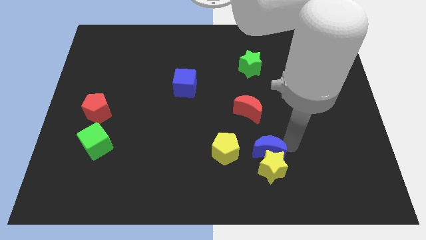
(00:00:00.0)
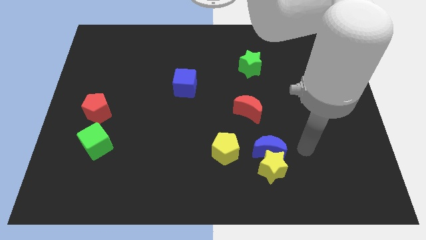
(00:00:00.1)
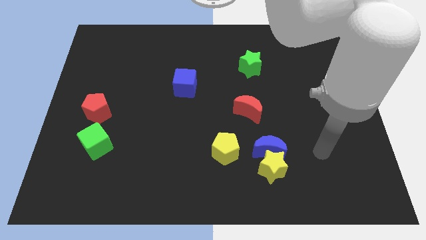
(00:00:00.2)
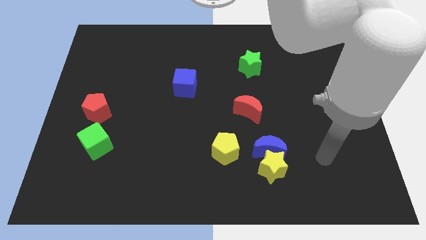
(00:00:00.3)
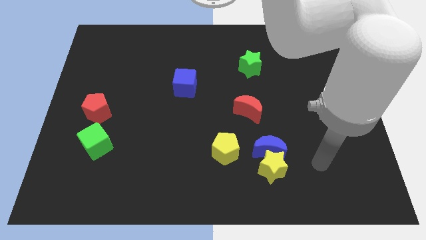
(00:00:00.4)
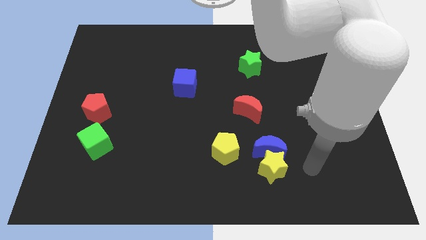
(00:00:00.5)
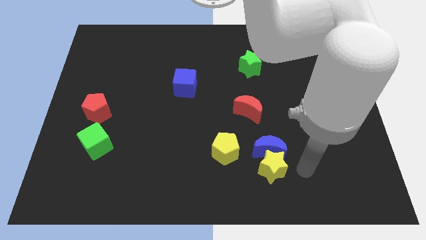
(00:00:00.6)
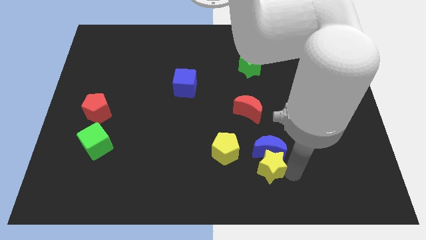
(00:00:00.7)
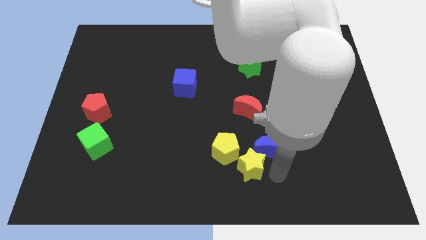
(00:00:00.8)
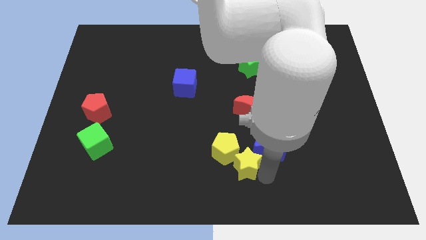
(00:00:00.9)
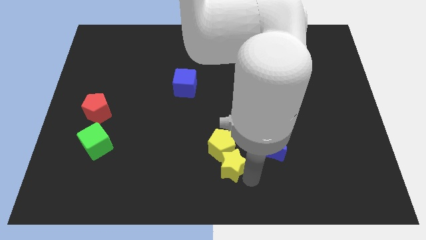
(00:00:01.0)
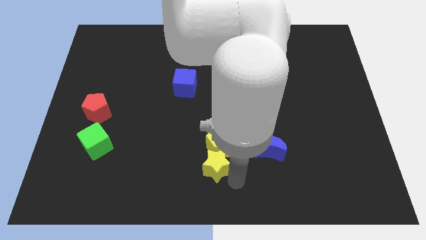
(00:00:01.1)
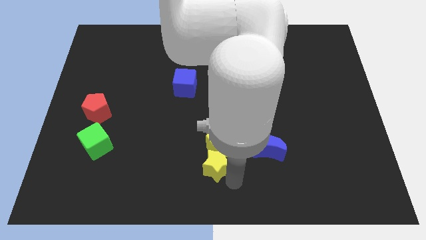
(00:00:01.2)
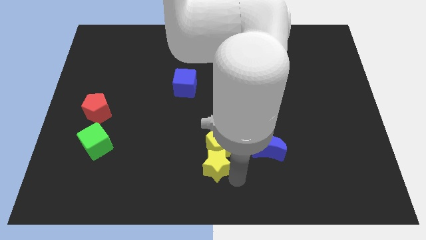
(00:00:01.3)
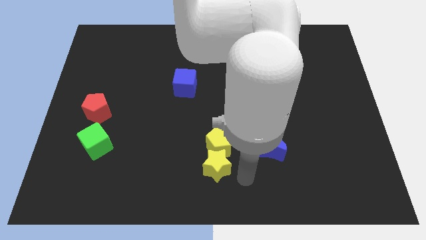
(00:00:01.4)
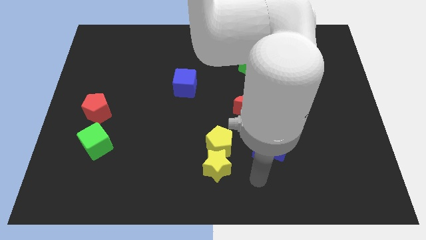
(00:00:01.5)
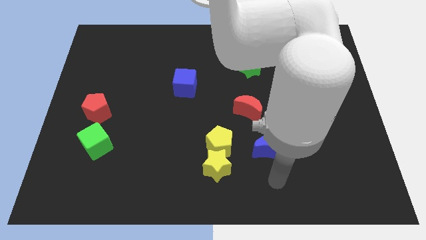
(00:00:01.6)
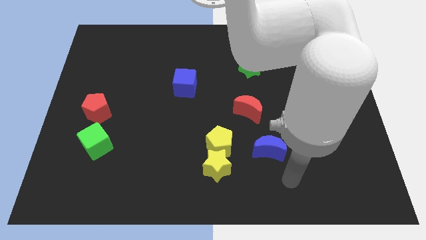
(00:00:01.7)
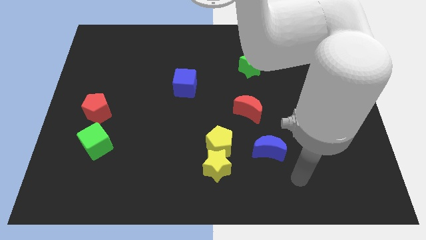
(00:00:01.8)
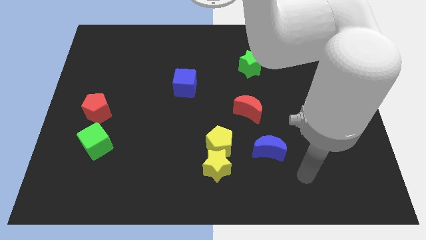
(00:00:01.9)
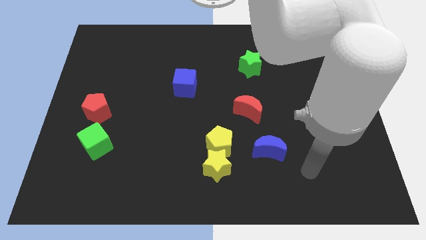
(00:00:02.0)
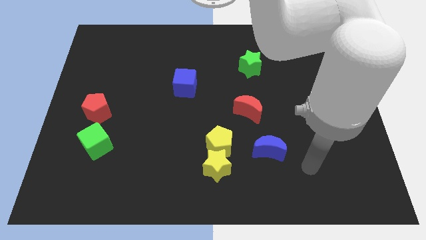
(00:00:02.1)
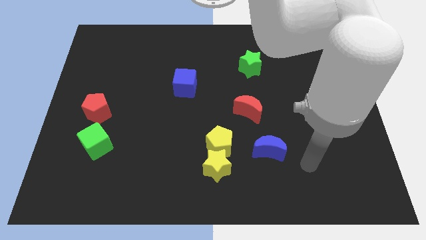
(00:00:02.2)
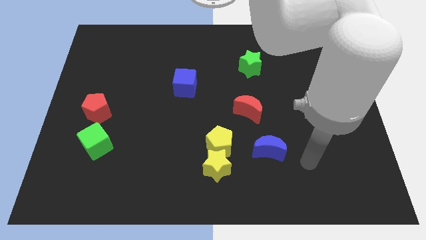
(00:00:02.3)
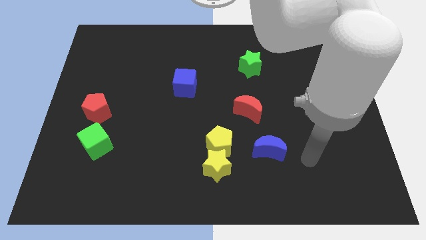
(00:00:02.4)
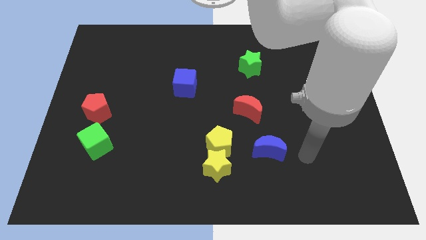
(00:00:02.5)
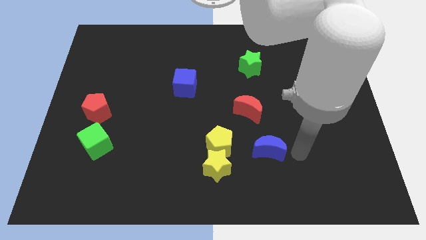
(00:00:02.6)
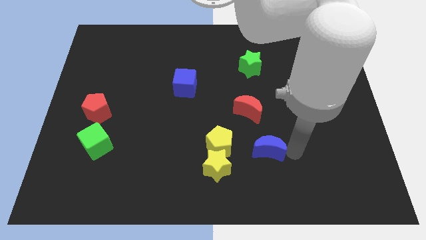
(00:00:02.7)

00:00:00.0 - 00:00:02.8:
place the yellow star below the yellow pentagon

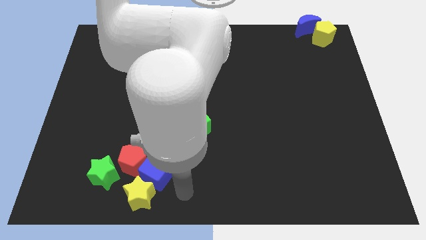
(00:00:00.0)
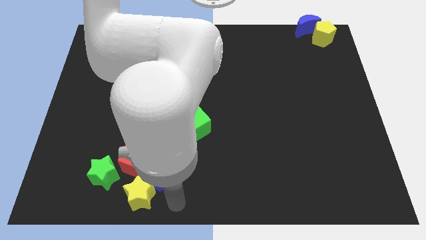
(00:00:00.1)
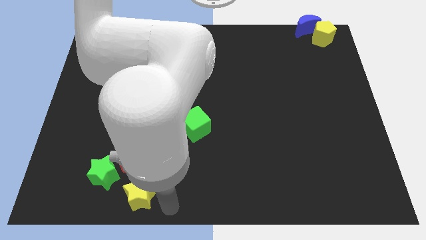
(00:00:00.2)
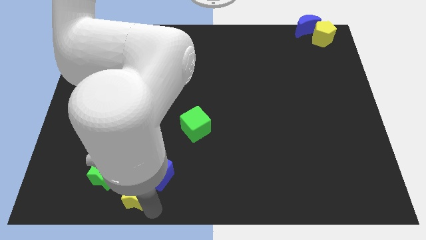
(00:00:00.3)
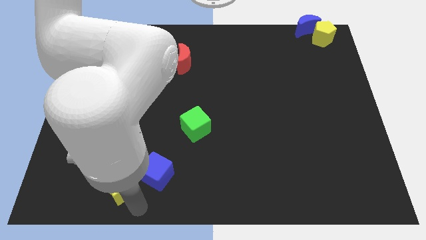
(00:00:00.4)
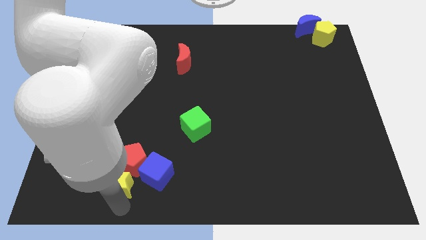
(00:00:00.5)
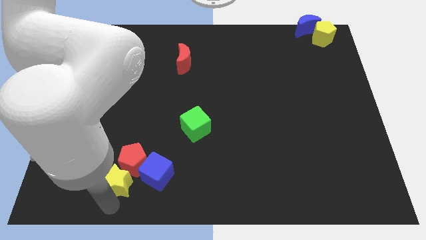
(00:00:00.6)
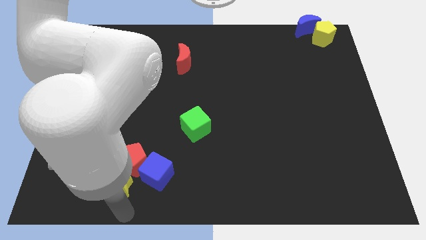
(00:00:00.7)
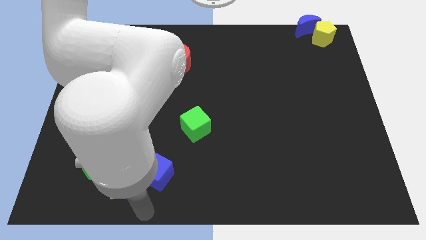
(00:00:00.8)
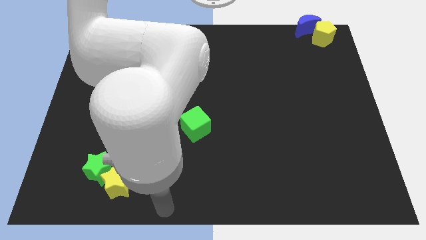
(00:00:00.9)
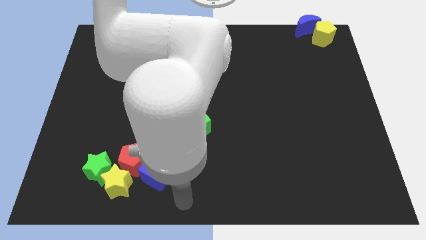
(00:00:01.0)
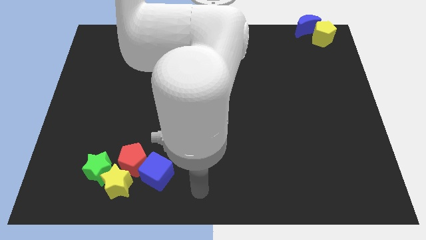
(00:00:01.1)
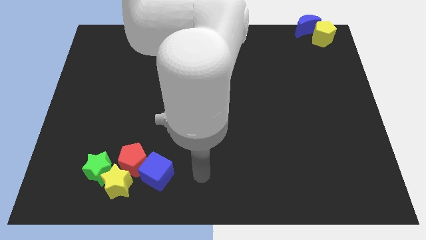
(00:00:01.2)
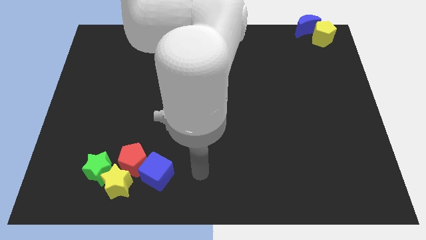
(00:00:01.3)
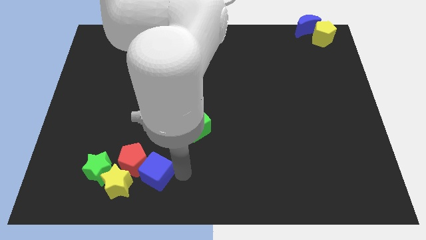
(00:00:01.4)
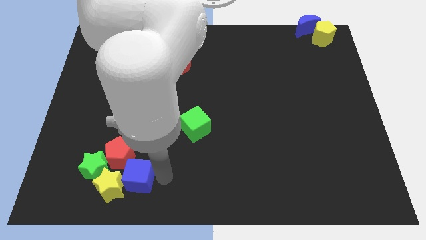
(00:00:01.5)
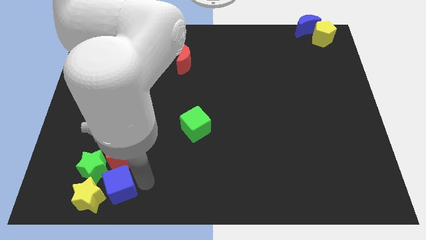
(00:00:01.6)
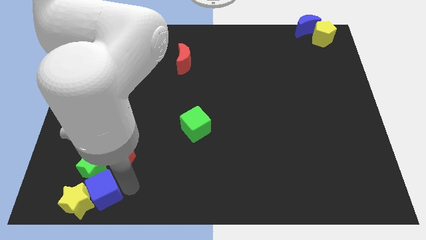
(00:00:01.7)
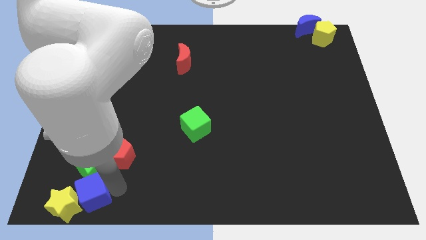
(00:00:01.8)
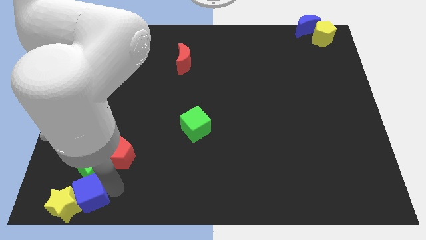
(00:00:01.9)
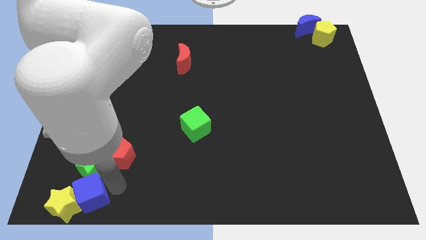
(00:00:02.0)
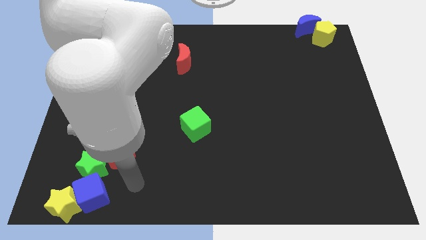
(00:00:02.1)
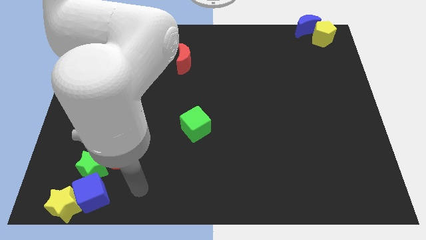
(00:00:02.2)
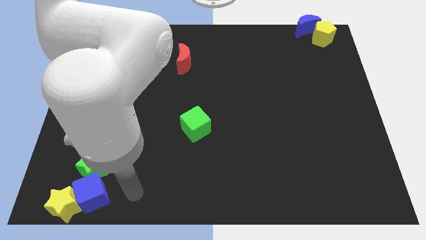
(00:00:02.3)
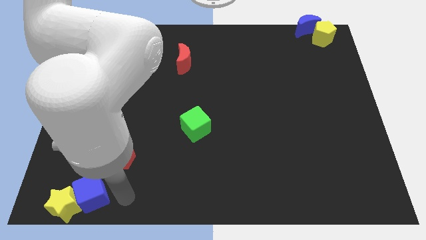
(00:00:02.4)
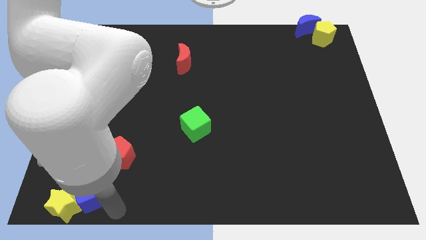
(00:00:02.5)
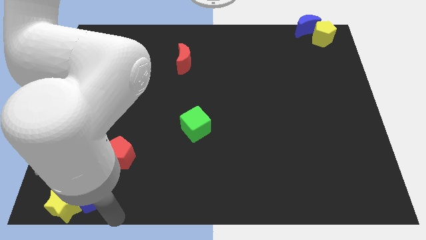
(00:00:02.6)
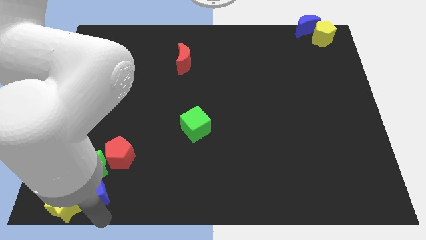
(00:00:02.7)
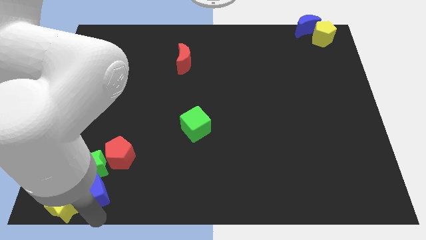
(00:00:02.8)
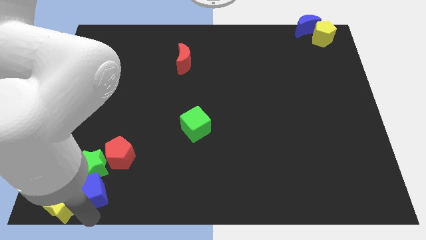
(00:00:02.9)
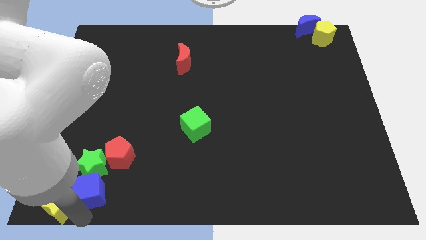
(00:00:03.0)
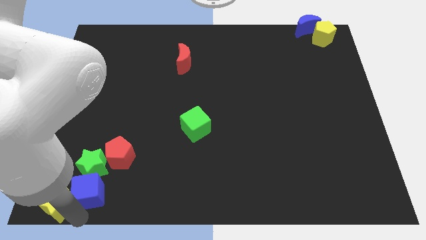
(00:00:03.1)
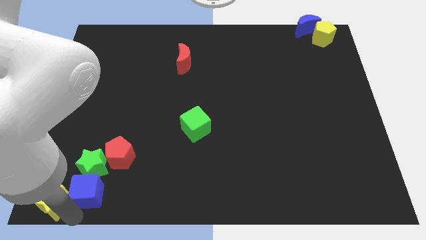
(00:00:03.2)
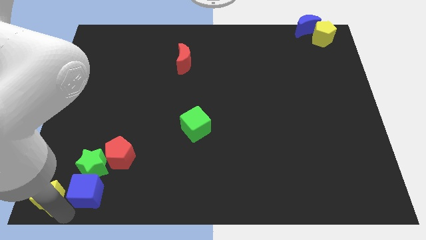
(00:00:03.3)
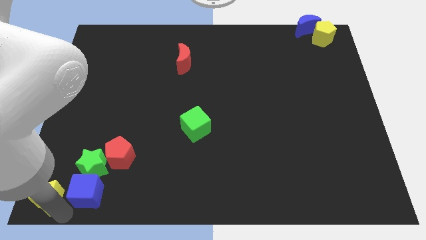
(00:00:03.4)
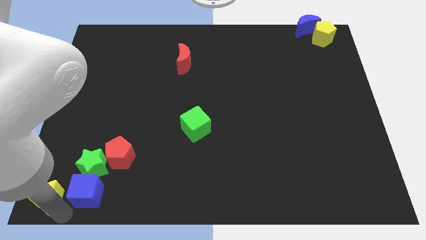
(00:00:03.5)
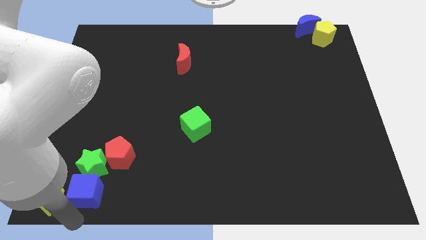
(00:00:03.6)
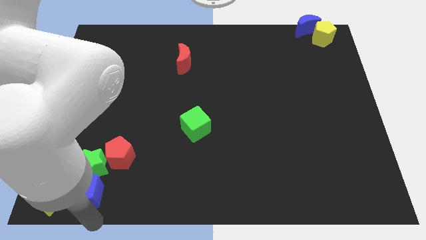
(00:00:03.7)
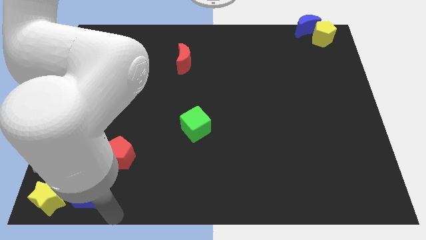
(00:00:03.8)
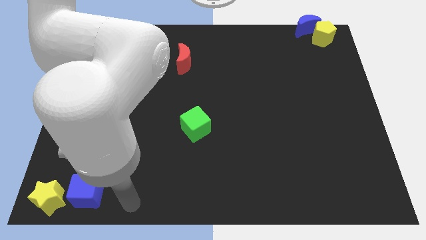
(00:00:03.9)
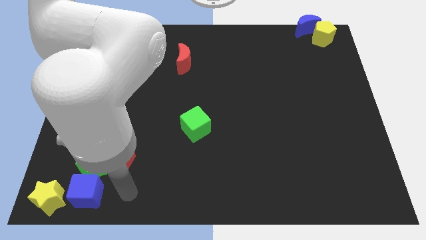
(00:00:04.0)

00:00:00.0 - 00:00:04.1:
move yellow star and blue cube to the bottom left corner

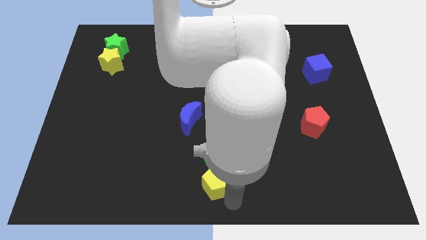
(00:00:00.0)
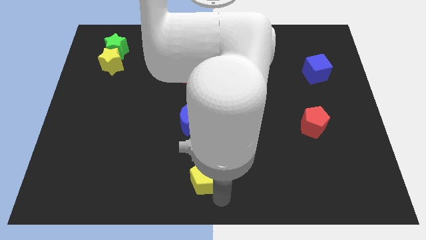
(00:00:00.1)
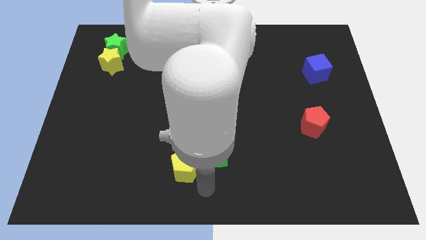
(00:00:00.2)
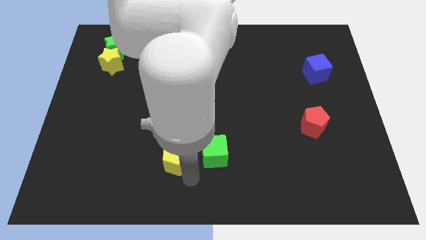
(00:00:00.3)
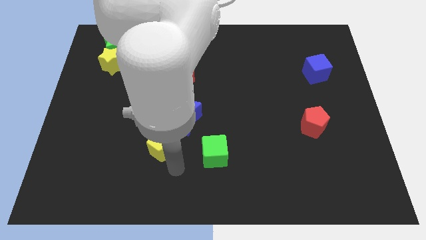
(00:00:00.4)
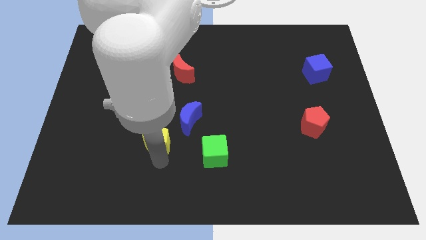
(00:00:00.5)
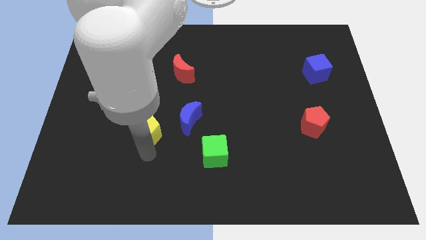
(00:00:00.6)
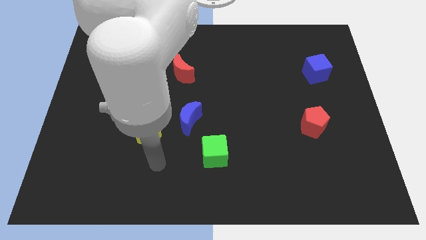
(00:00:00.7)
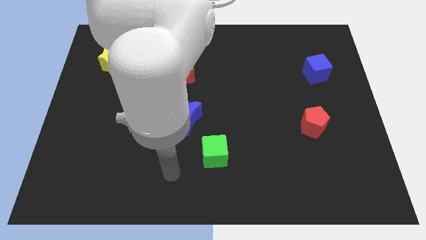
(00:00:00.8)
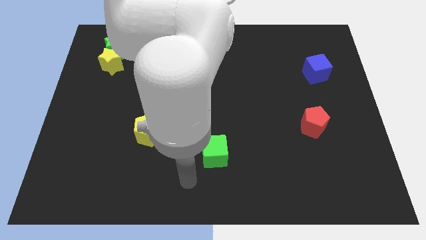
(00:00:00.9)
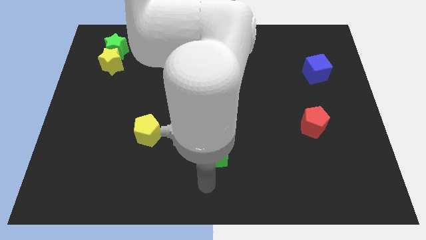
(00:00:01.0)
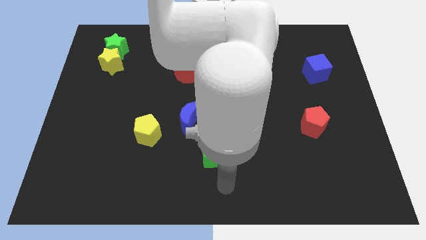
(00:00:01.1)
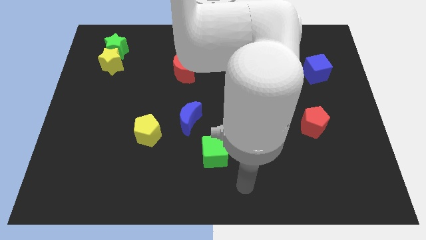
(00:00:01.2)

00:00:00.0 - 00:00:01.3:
push the yellow pentagon away from the green cube

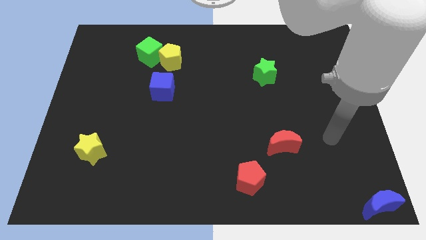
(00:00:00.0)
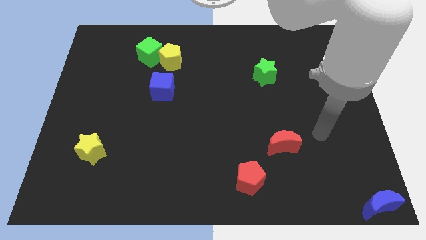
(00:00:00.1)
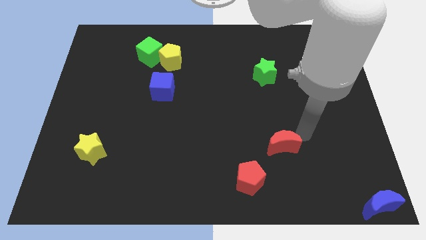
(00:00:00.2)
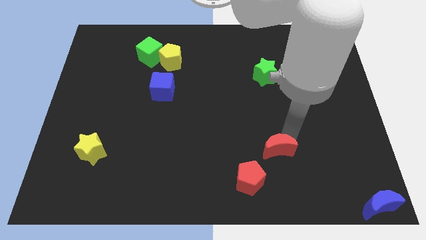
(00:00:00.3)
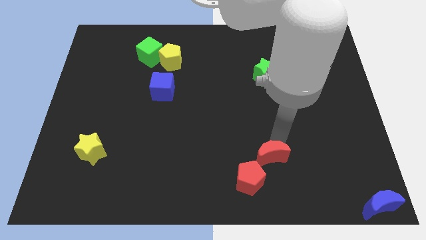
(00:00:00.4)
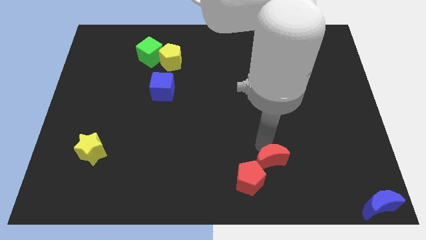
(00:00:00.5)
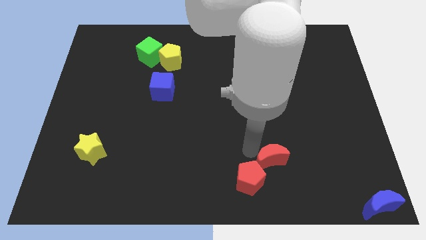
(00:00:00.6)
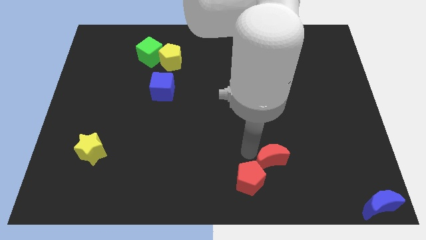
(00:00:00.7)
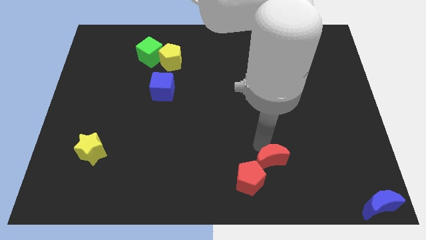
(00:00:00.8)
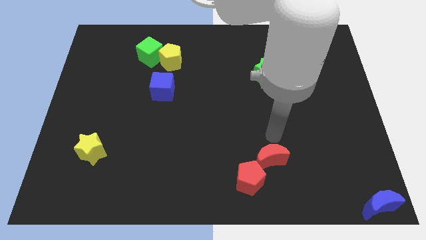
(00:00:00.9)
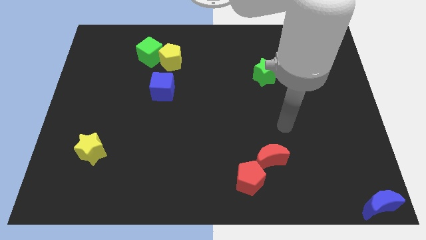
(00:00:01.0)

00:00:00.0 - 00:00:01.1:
move the red crescent close to the red pentagon
